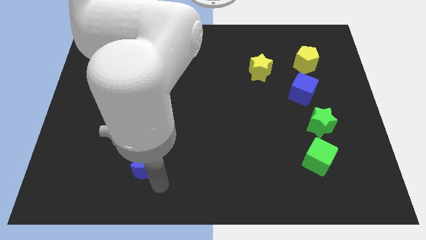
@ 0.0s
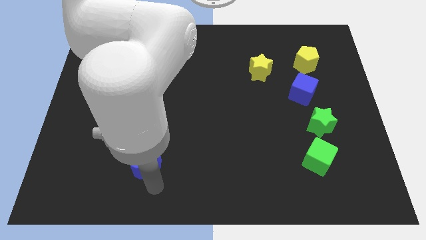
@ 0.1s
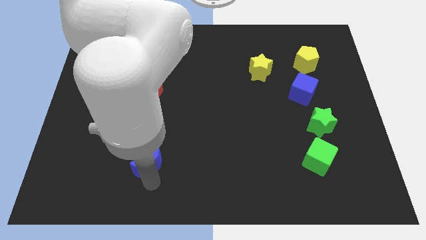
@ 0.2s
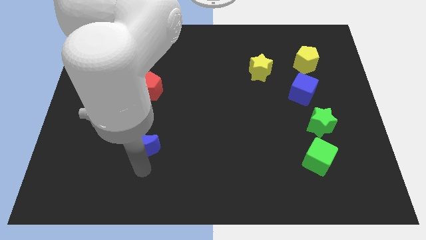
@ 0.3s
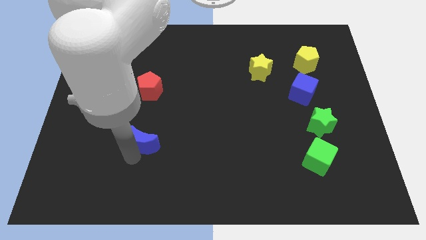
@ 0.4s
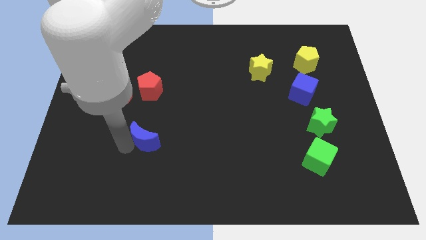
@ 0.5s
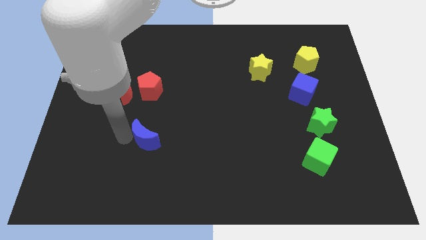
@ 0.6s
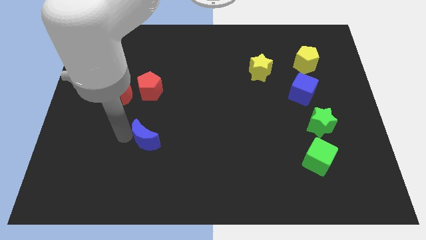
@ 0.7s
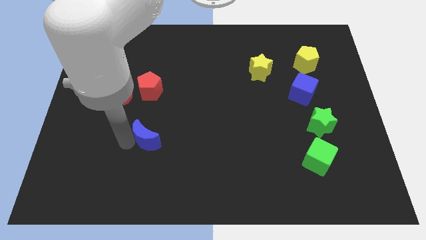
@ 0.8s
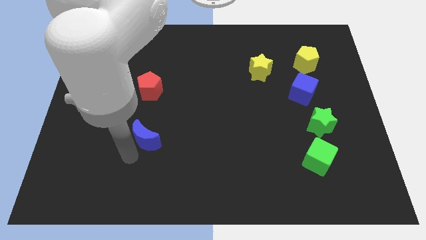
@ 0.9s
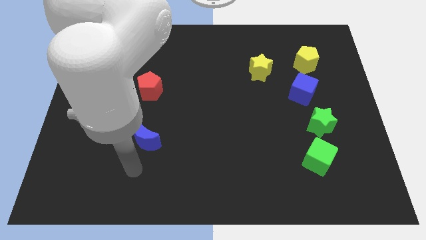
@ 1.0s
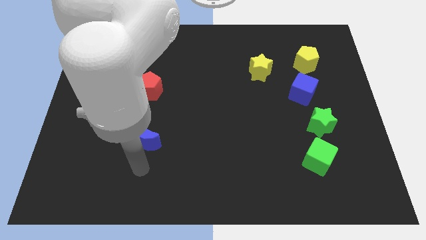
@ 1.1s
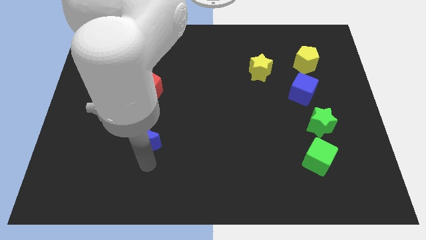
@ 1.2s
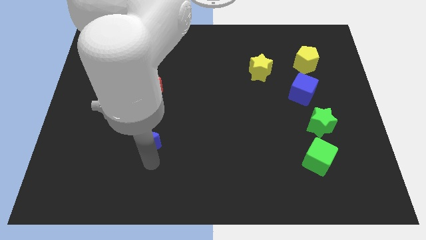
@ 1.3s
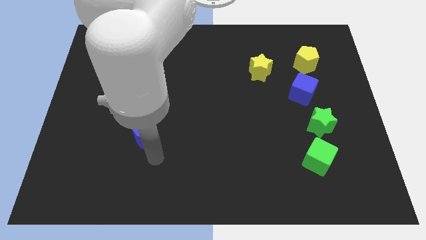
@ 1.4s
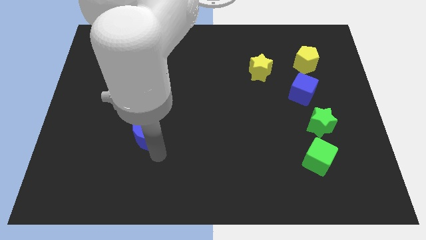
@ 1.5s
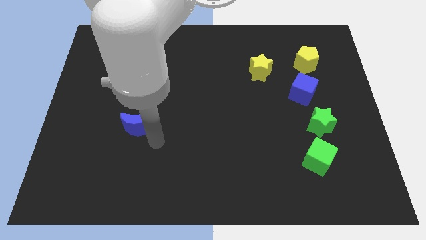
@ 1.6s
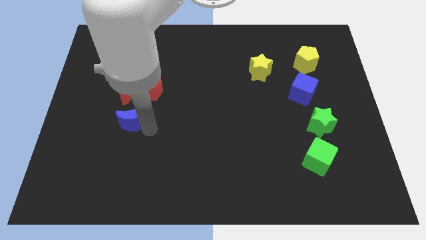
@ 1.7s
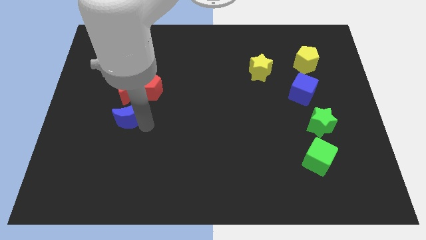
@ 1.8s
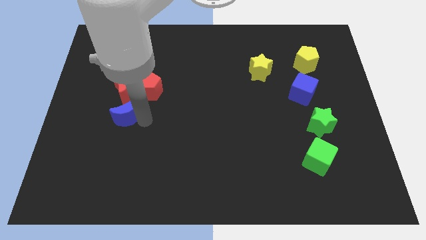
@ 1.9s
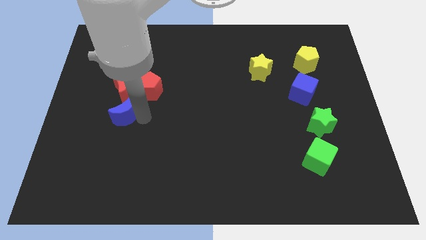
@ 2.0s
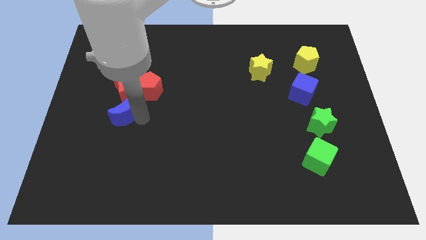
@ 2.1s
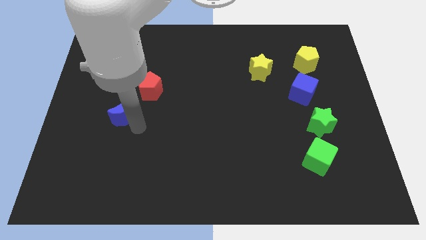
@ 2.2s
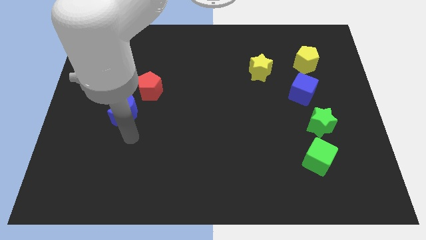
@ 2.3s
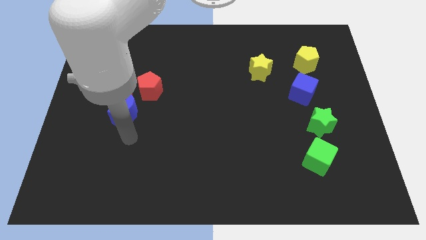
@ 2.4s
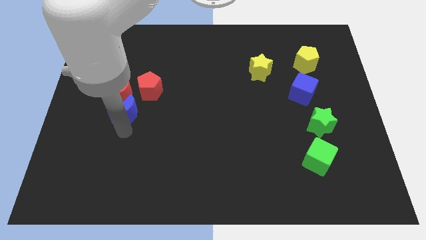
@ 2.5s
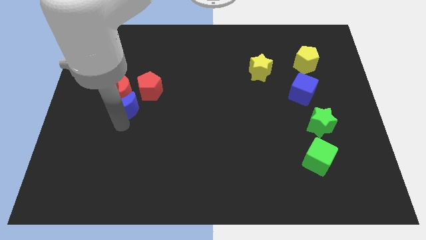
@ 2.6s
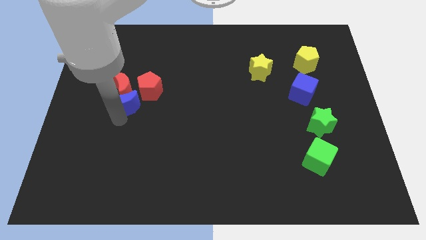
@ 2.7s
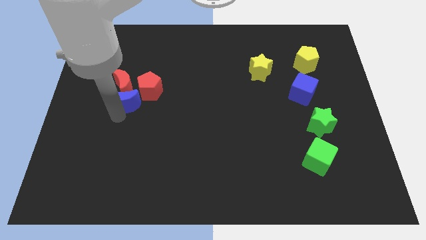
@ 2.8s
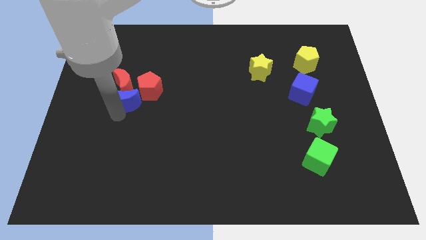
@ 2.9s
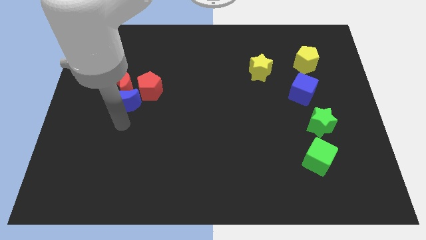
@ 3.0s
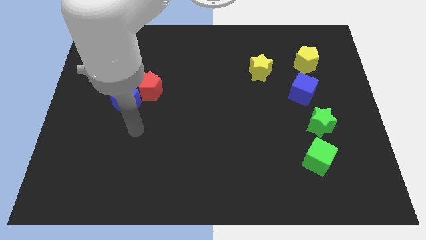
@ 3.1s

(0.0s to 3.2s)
slide blue moon into red moon

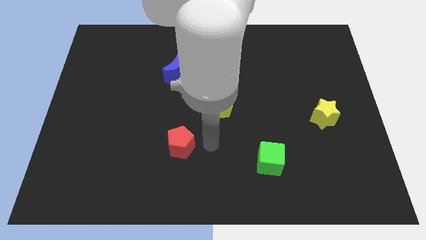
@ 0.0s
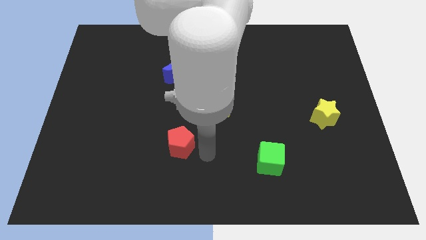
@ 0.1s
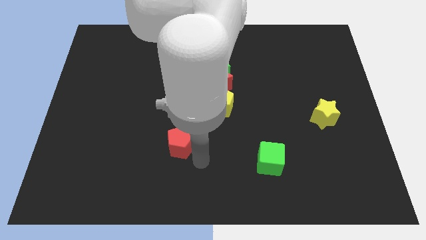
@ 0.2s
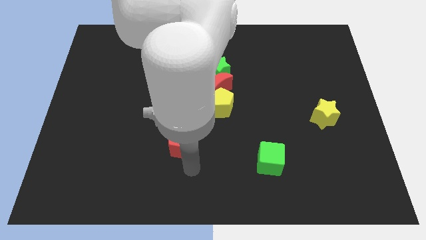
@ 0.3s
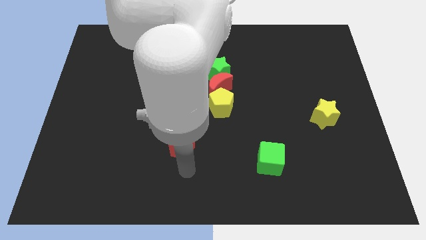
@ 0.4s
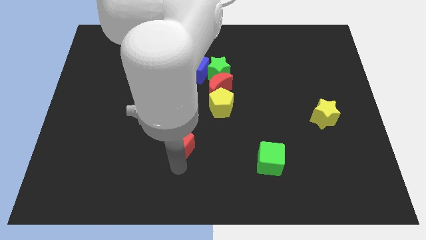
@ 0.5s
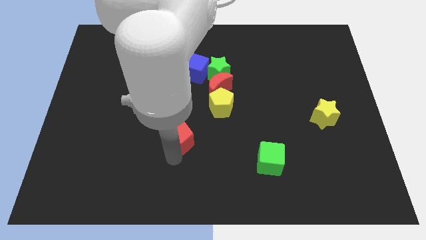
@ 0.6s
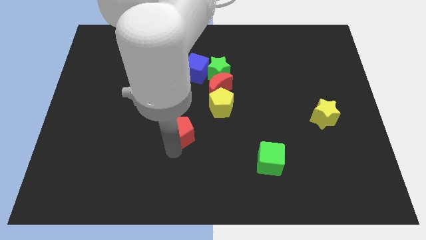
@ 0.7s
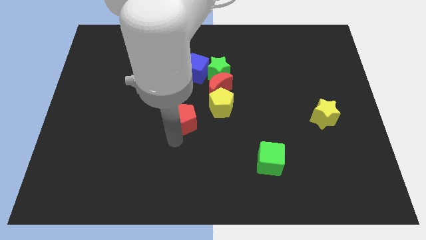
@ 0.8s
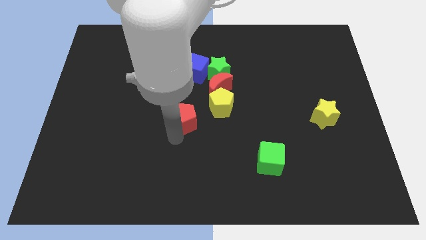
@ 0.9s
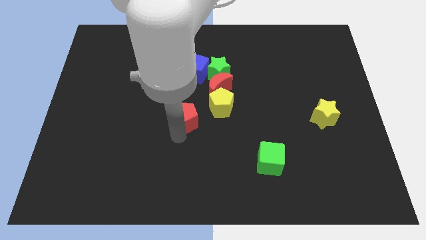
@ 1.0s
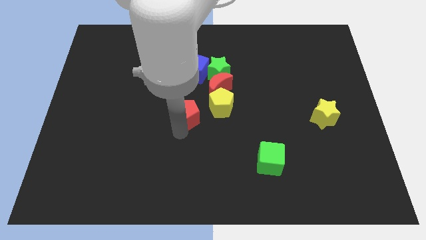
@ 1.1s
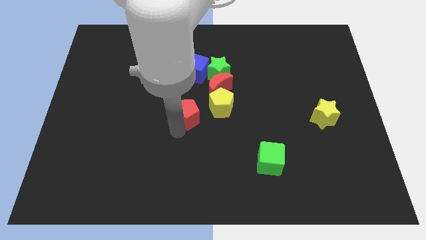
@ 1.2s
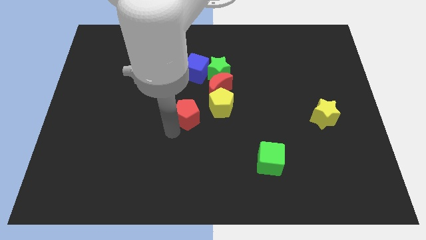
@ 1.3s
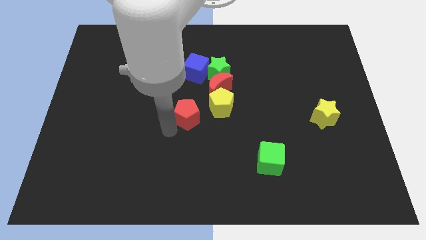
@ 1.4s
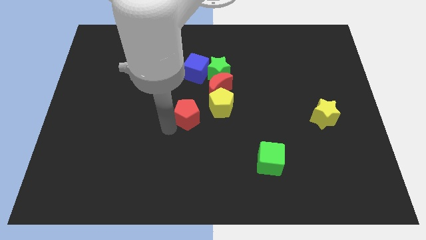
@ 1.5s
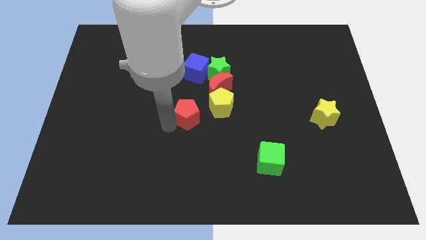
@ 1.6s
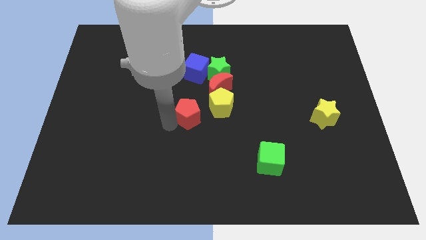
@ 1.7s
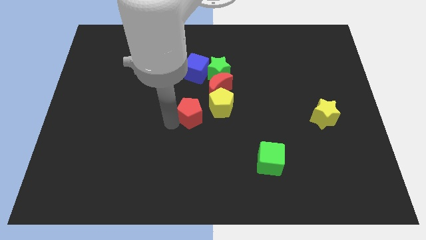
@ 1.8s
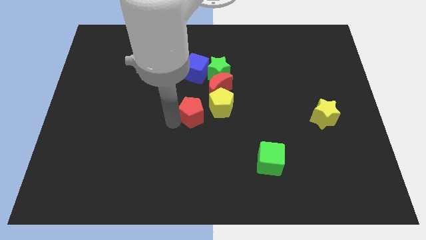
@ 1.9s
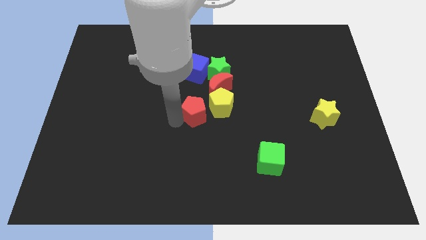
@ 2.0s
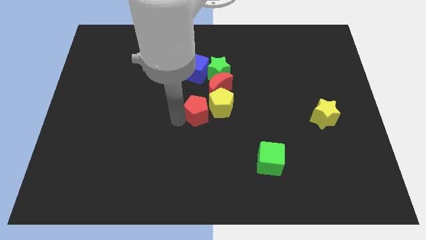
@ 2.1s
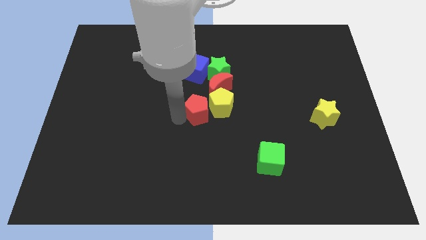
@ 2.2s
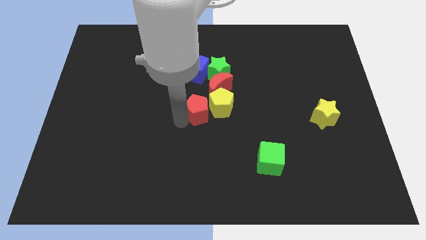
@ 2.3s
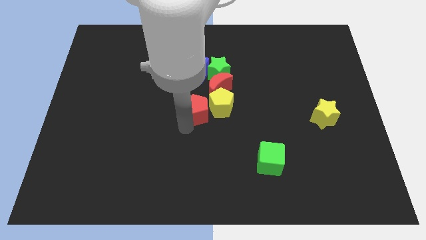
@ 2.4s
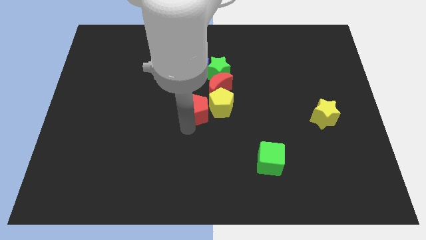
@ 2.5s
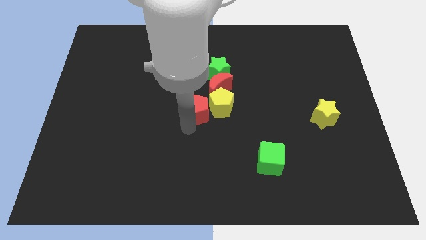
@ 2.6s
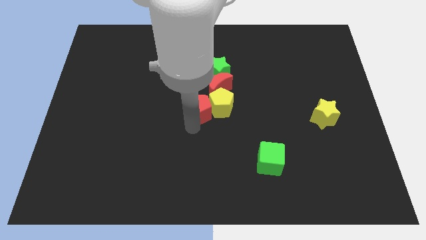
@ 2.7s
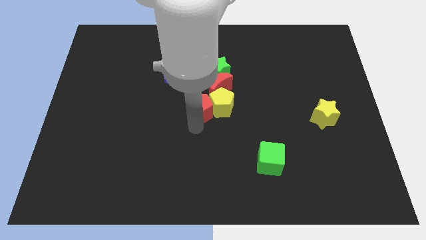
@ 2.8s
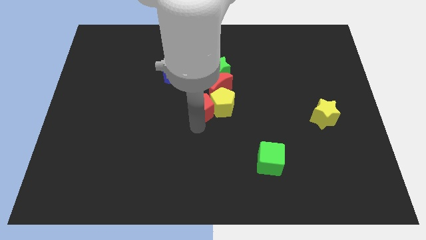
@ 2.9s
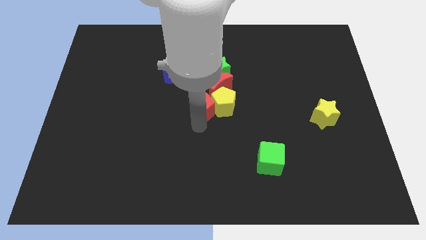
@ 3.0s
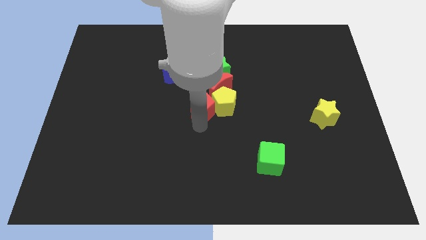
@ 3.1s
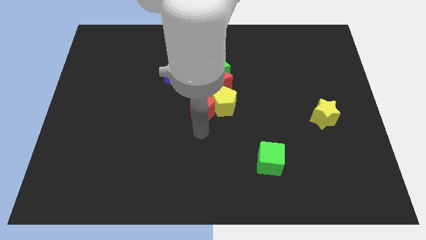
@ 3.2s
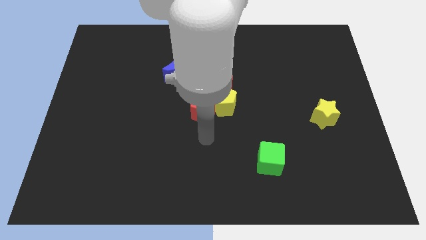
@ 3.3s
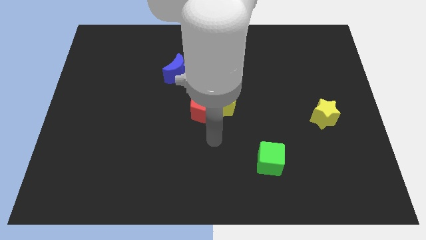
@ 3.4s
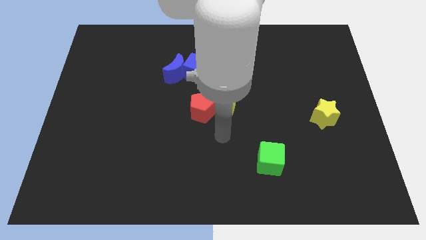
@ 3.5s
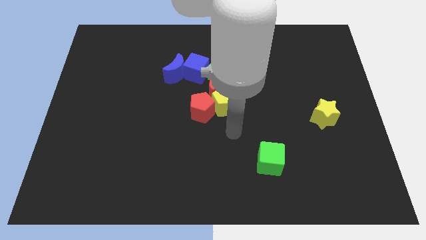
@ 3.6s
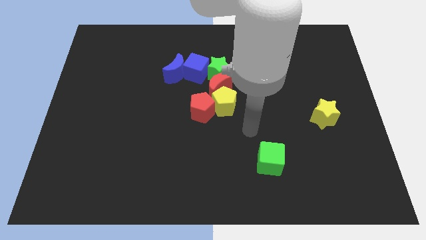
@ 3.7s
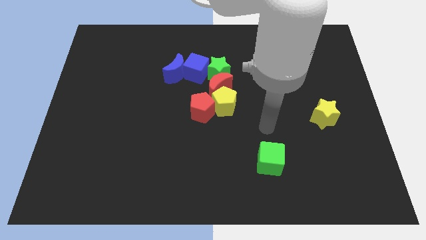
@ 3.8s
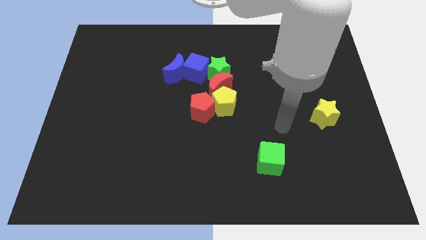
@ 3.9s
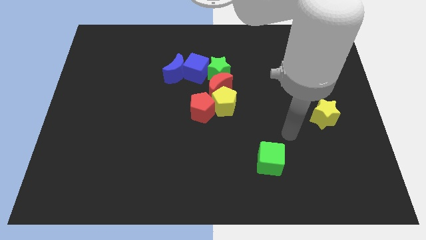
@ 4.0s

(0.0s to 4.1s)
put the red pentagon into the yellow pentagon

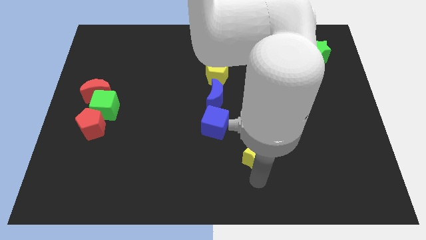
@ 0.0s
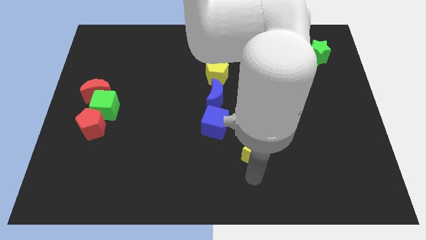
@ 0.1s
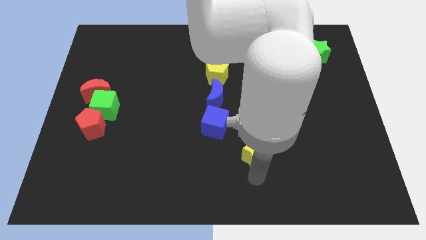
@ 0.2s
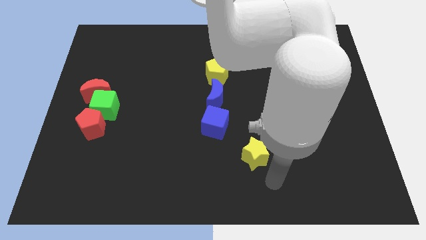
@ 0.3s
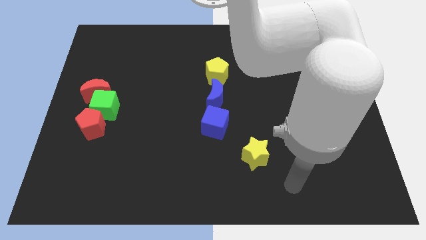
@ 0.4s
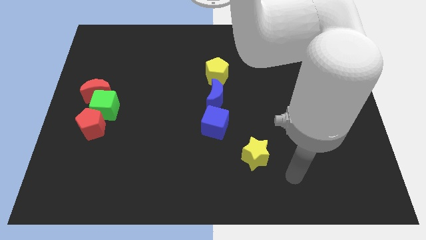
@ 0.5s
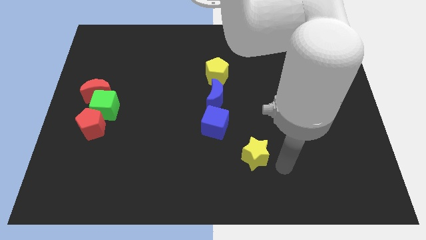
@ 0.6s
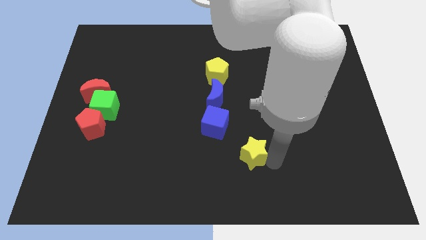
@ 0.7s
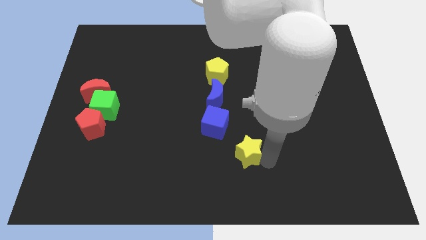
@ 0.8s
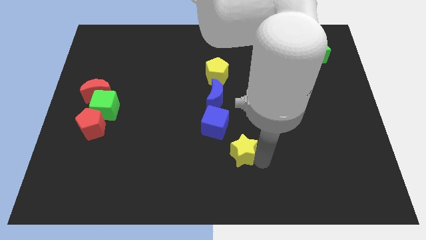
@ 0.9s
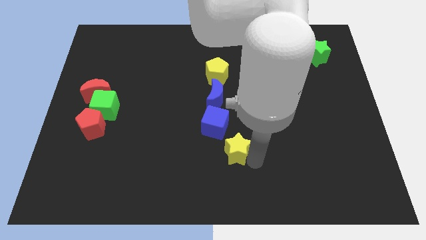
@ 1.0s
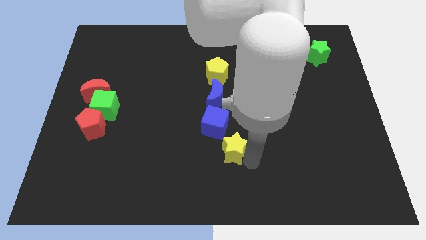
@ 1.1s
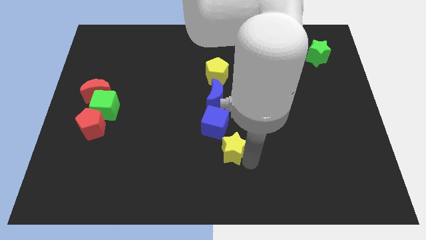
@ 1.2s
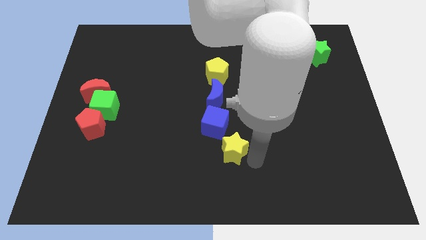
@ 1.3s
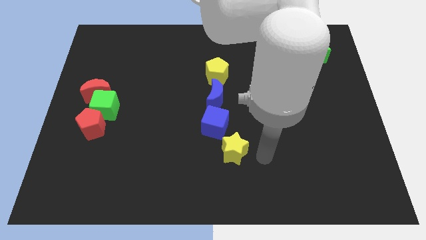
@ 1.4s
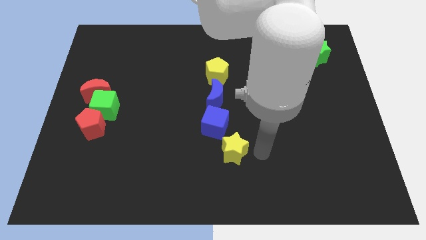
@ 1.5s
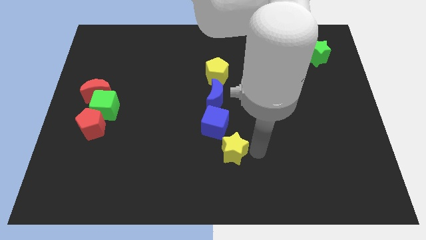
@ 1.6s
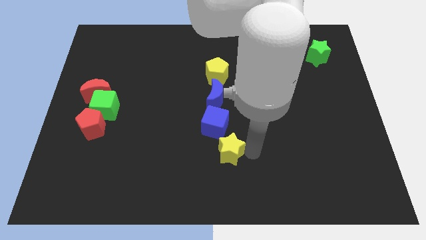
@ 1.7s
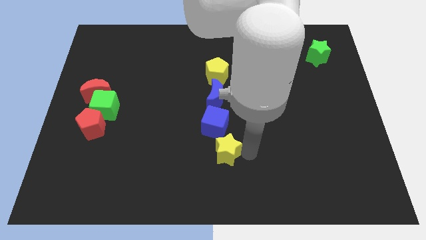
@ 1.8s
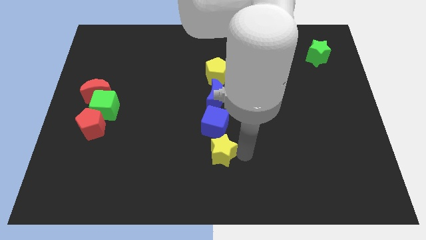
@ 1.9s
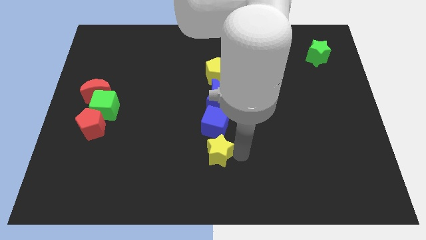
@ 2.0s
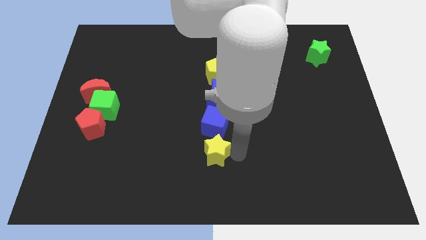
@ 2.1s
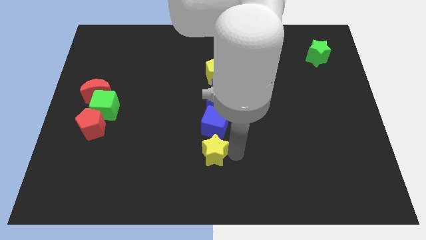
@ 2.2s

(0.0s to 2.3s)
move the yellow star to the bottom of the blue cube
